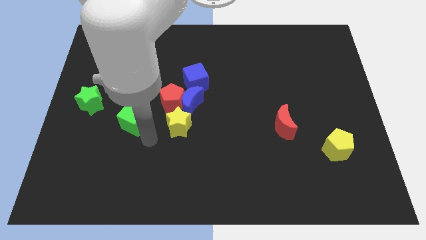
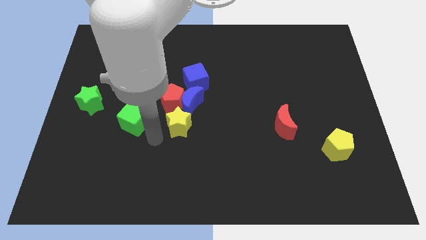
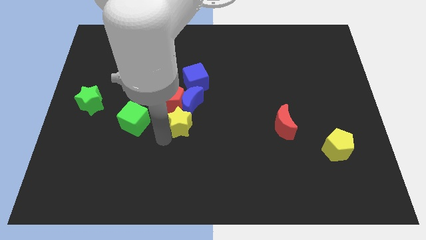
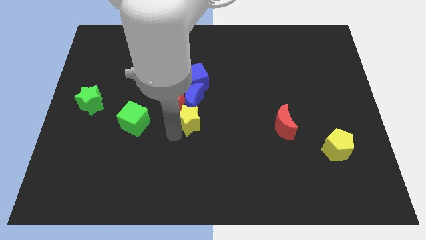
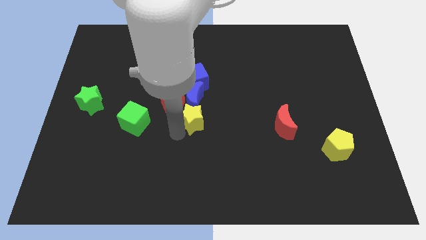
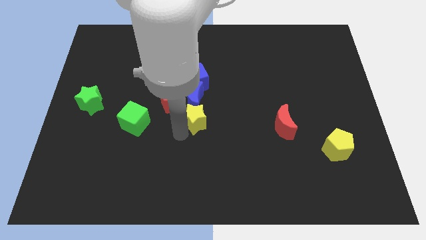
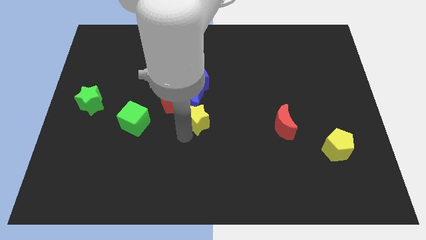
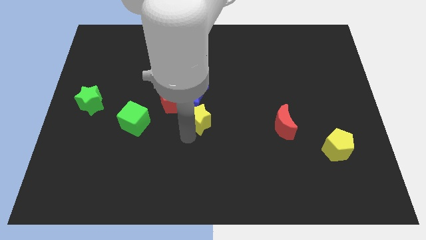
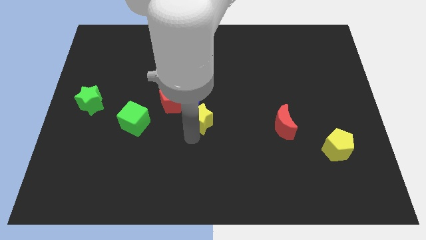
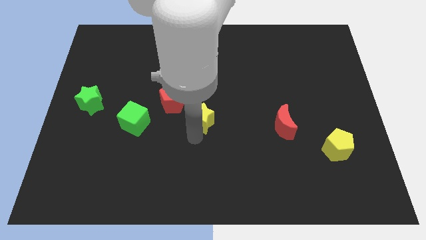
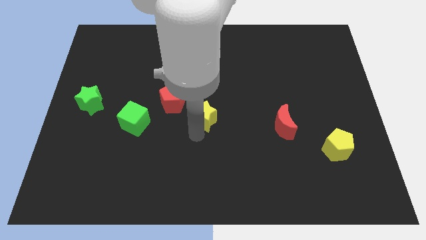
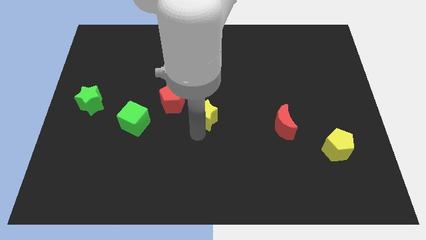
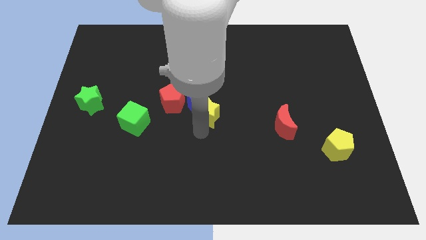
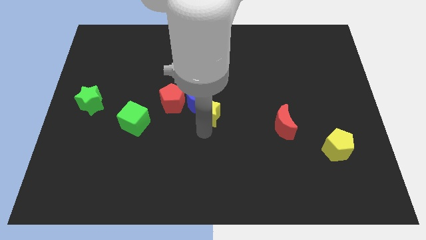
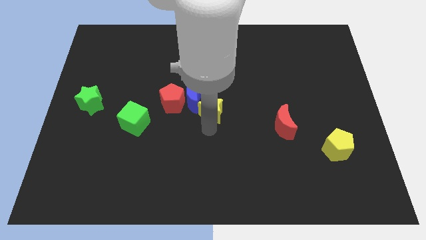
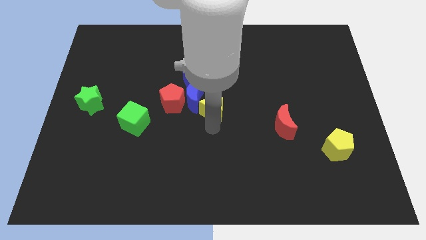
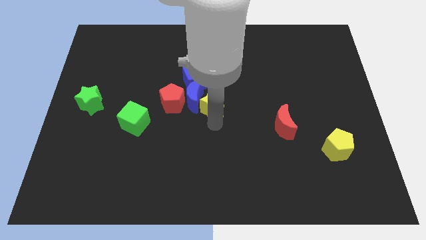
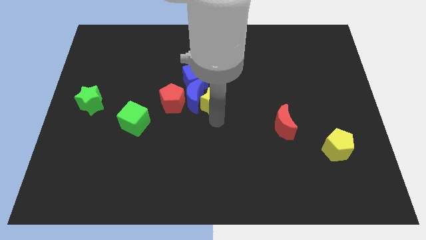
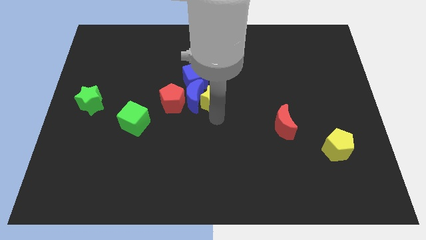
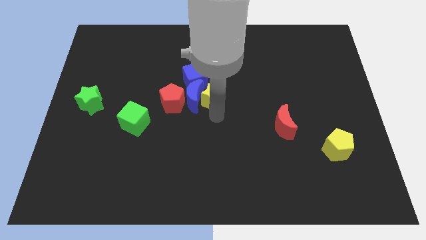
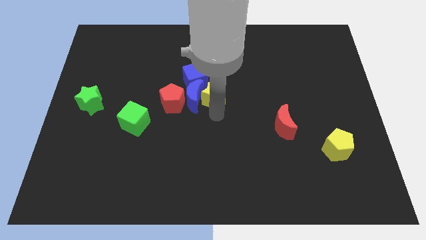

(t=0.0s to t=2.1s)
move the yellow star to the right of the blue crescent

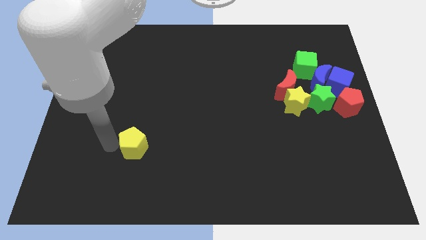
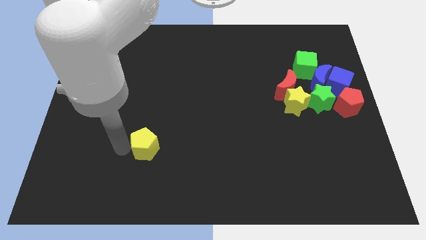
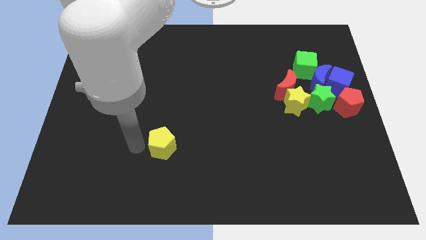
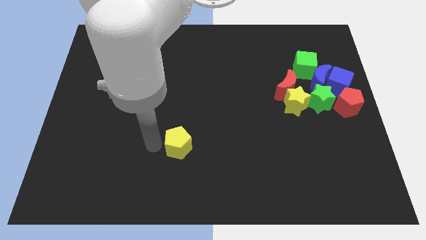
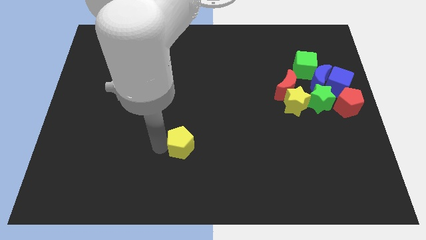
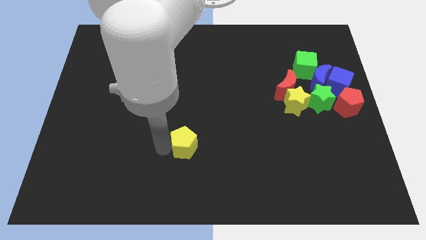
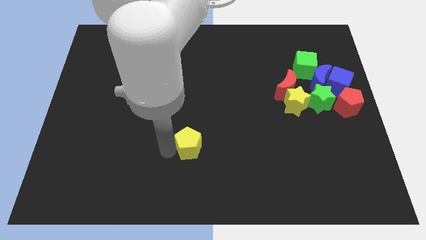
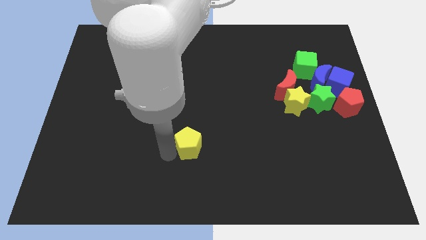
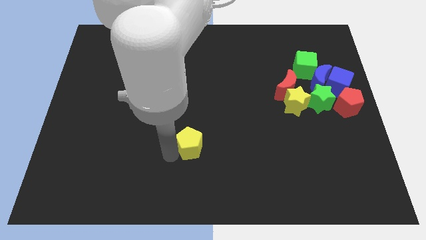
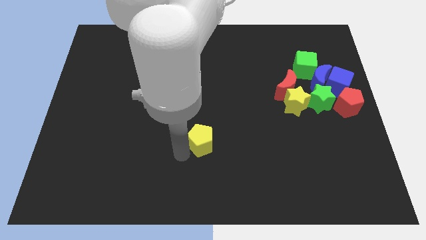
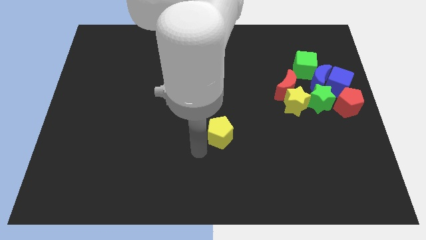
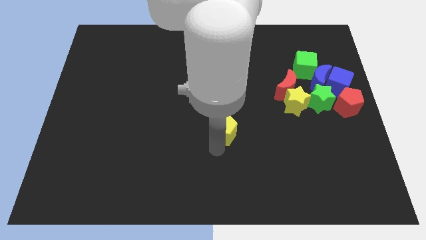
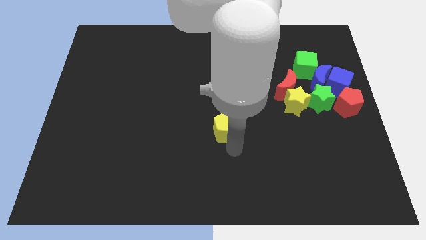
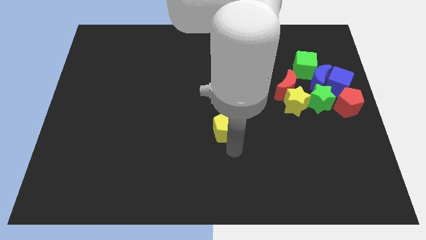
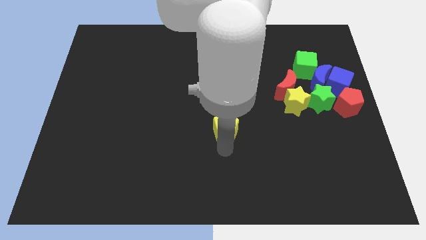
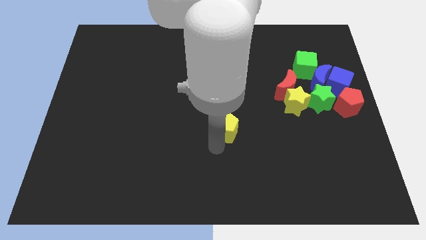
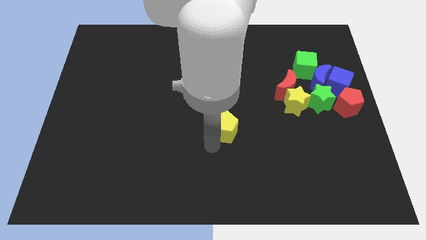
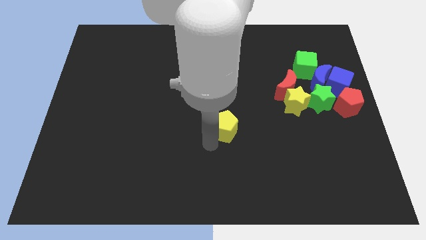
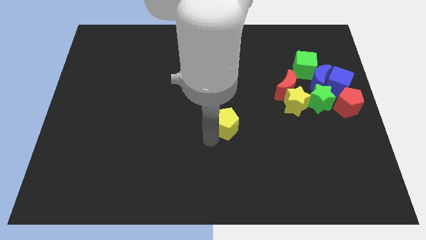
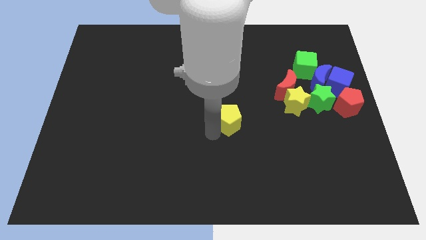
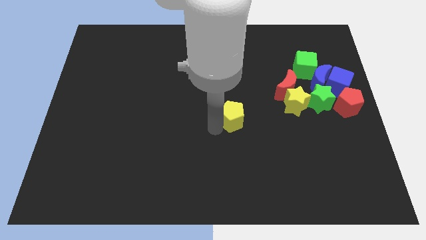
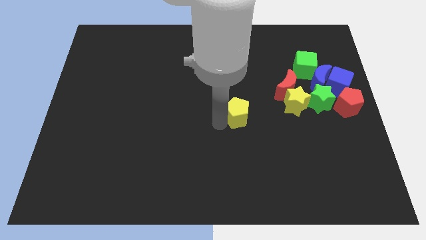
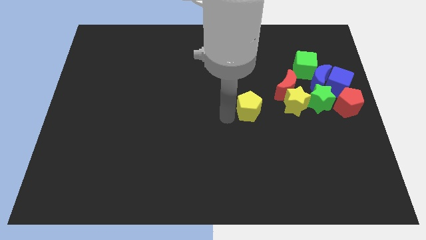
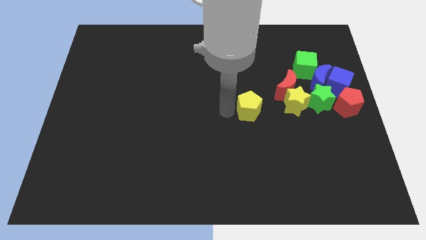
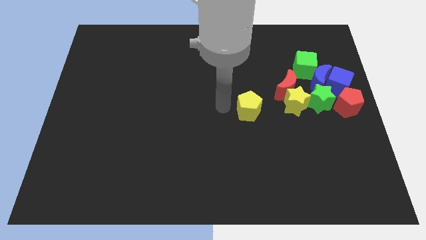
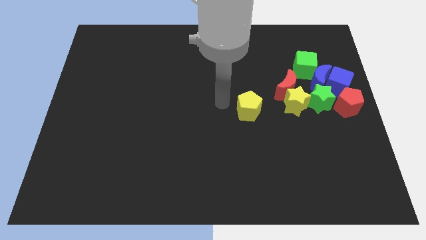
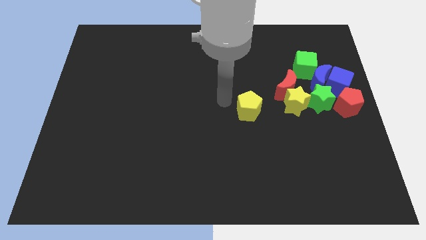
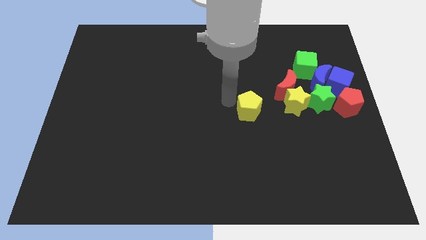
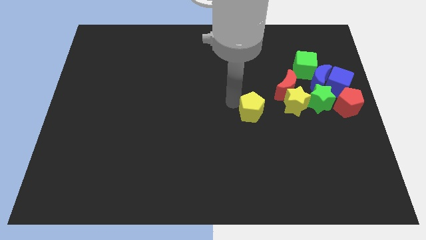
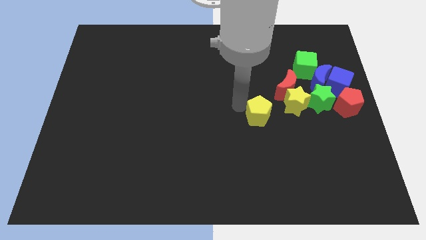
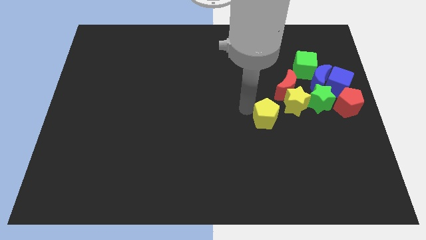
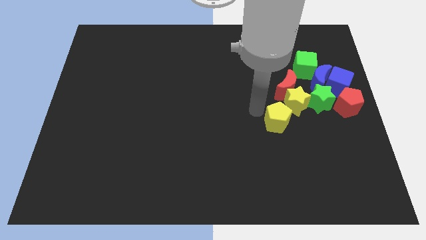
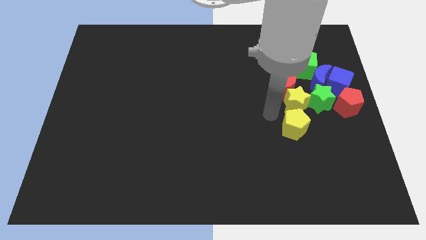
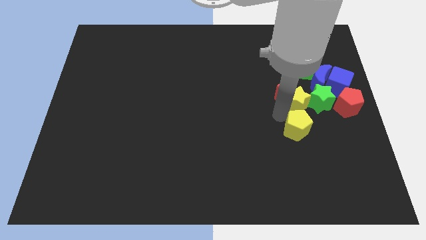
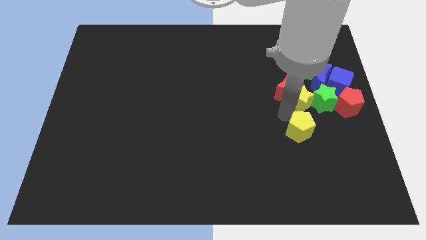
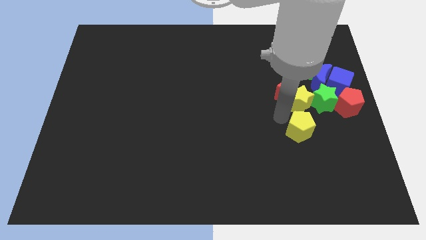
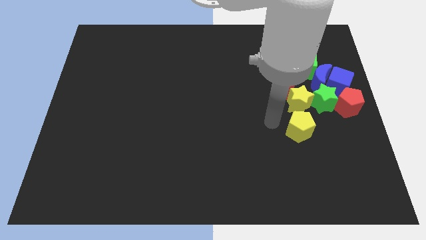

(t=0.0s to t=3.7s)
push the yellow pentagon and place it below the yellow star

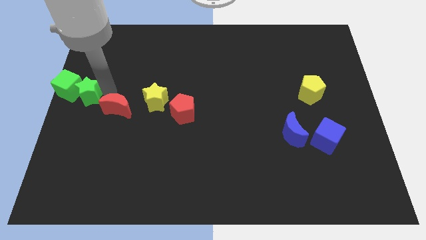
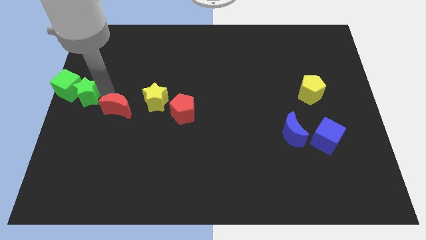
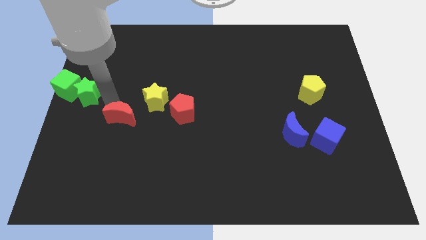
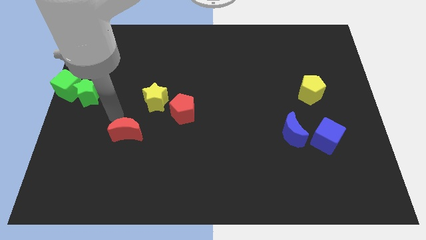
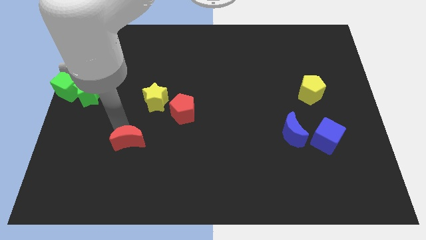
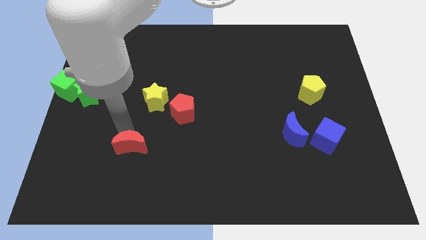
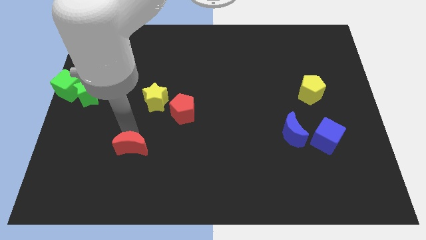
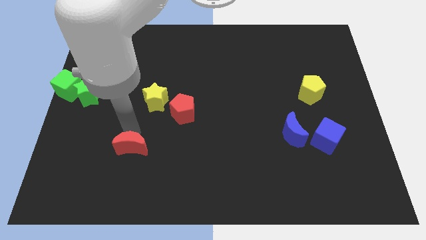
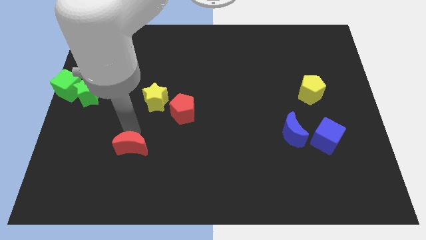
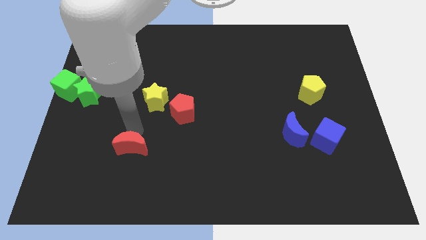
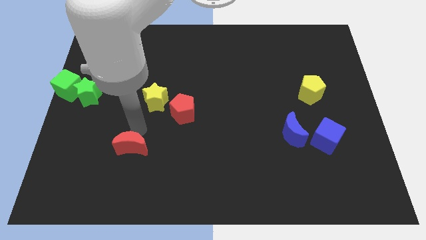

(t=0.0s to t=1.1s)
move the red crescent to the bottom left of the red pentagon

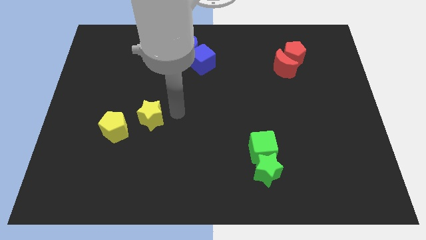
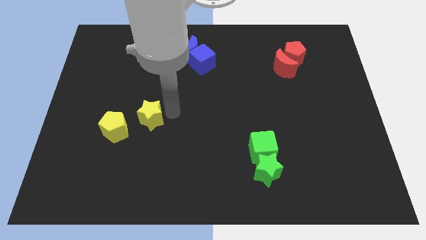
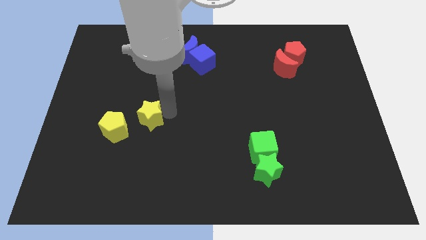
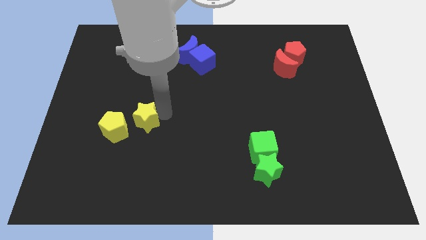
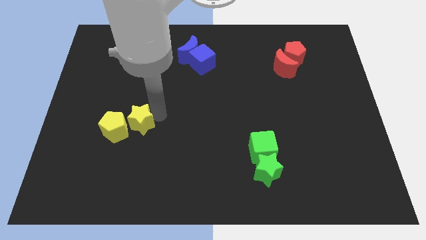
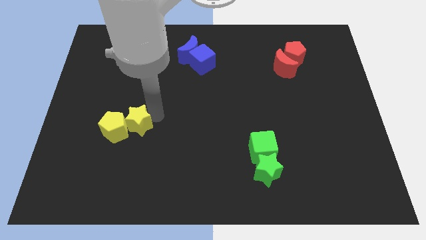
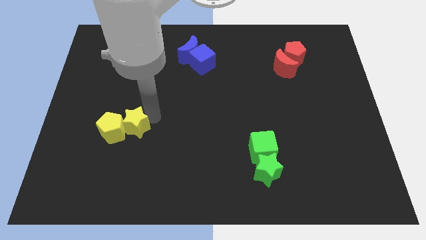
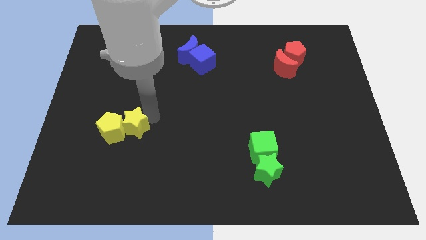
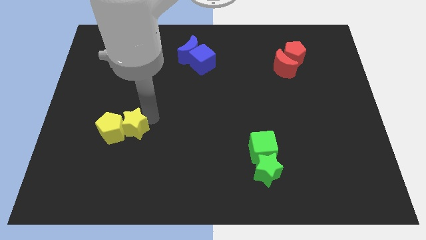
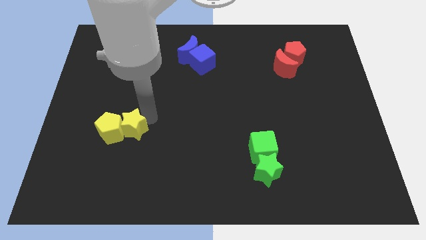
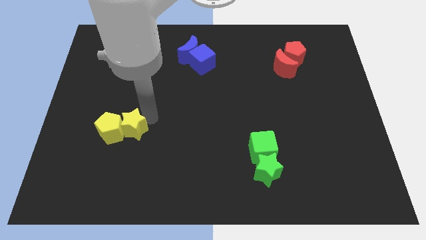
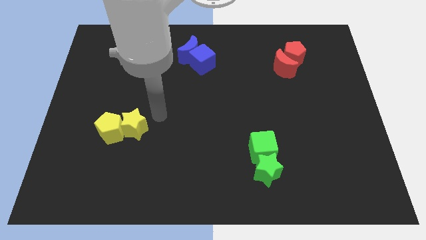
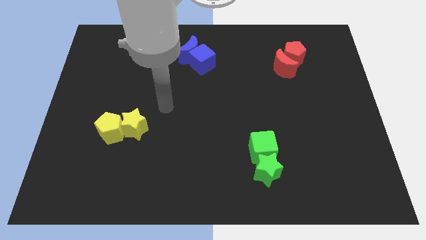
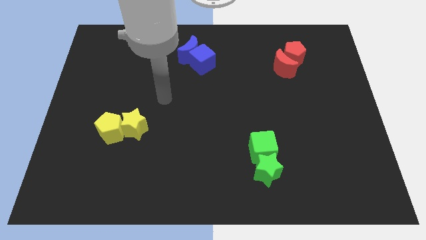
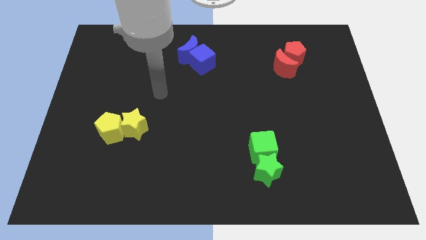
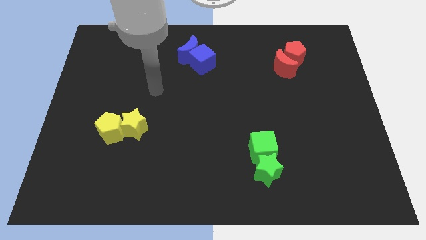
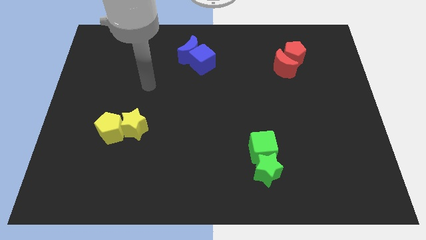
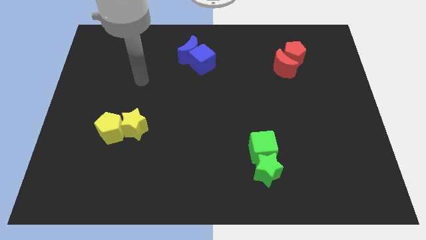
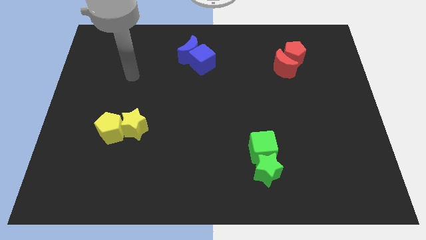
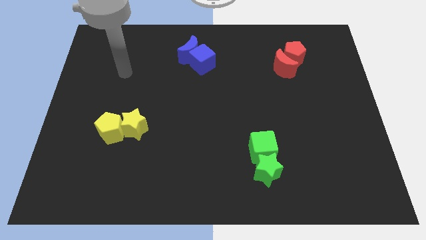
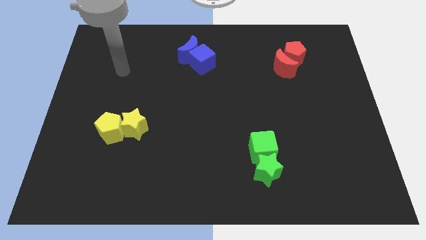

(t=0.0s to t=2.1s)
move yellow star close to the yellow pentagon

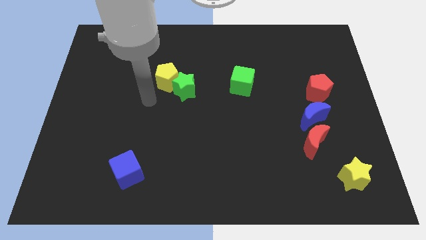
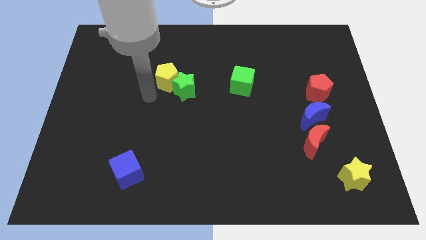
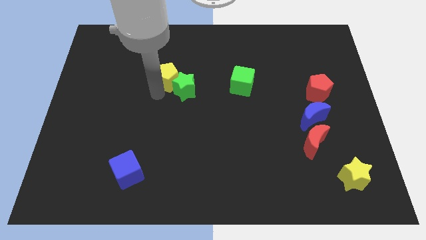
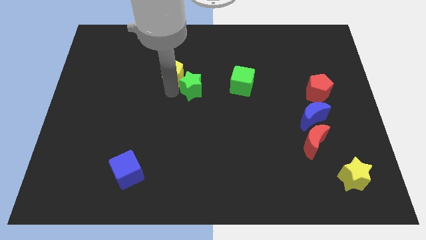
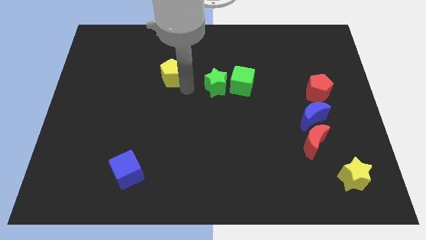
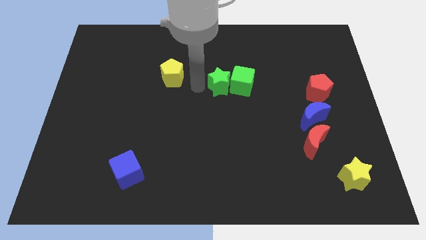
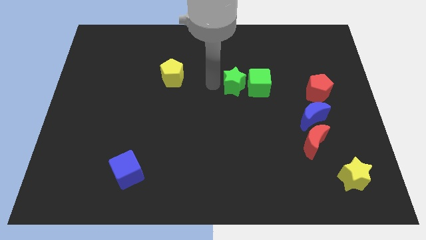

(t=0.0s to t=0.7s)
push the green star to the left of the green cube
